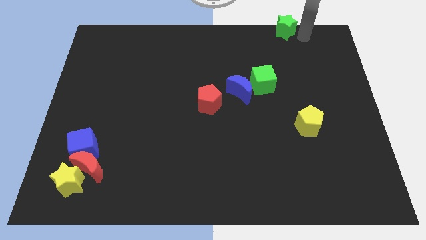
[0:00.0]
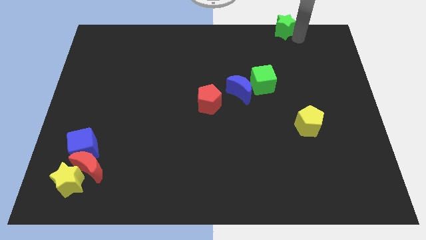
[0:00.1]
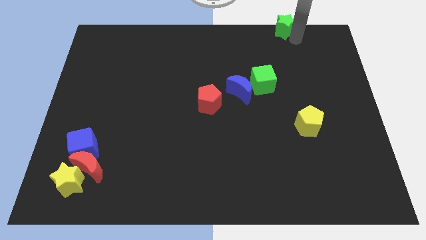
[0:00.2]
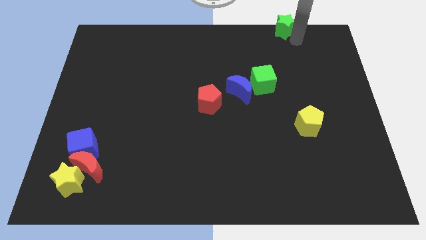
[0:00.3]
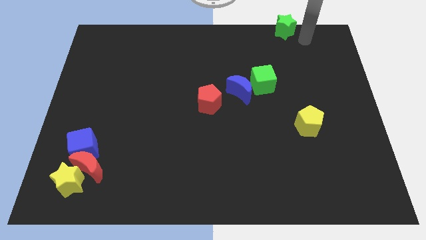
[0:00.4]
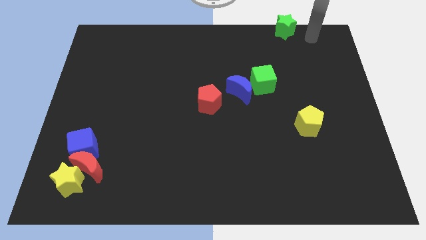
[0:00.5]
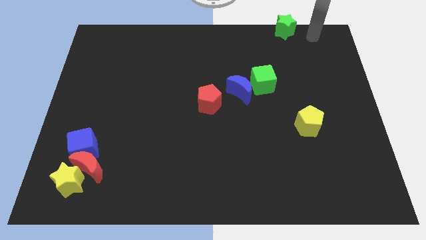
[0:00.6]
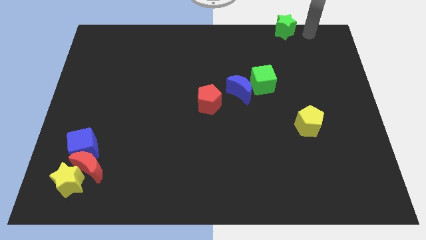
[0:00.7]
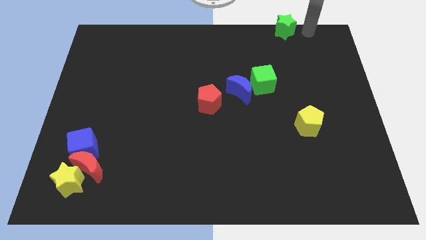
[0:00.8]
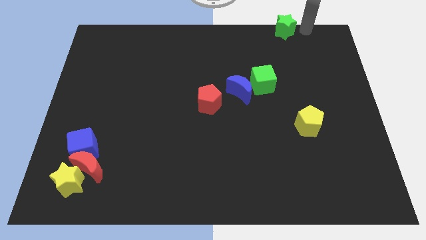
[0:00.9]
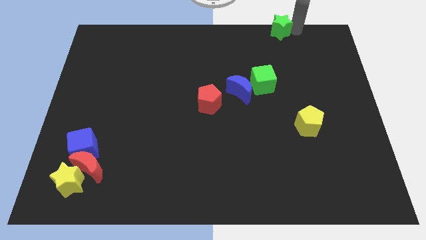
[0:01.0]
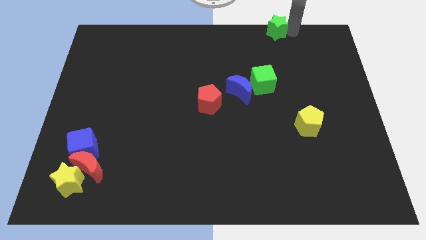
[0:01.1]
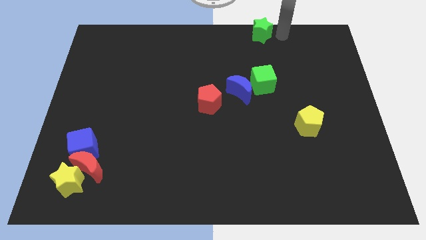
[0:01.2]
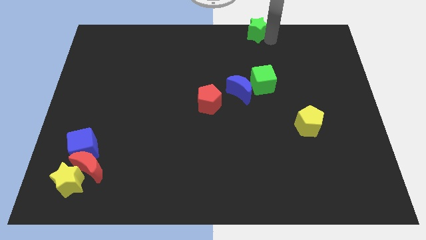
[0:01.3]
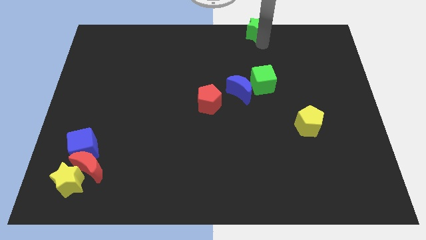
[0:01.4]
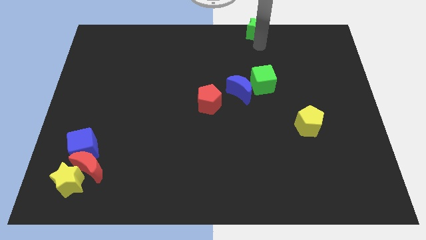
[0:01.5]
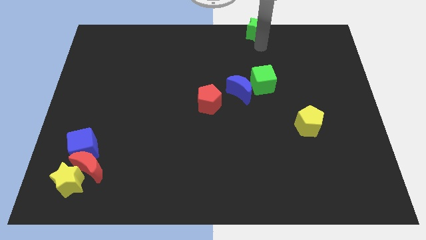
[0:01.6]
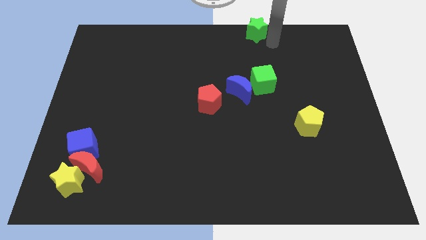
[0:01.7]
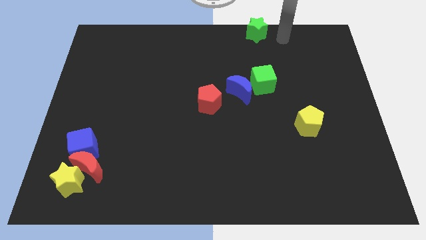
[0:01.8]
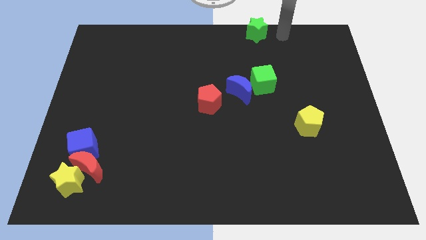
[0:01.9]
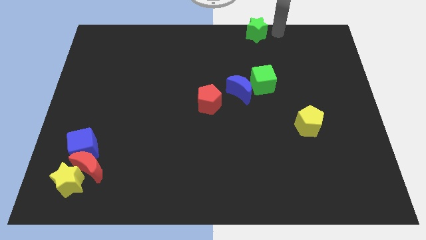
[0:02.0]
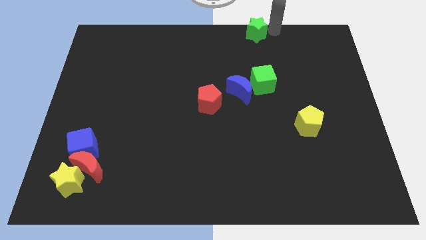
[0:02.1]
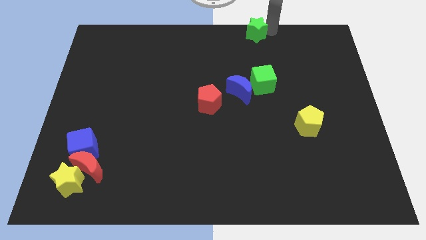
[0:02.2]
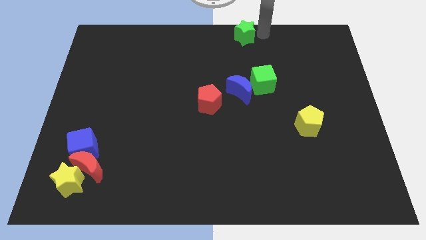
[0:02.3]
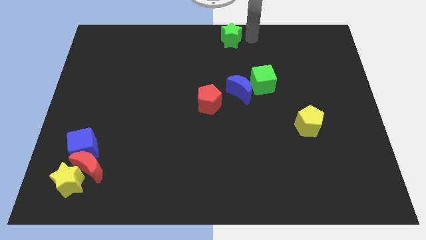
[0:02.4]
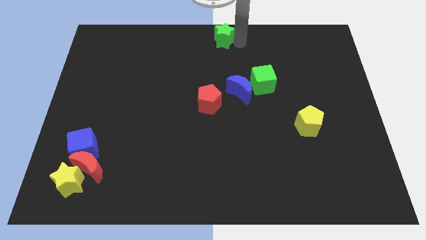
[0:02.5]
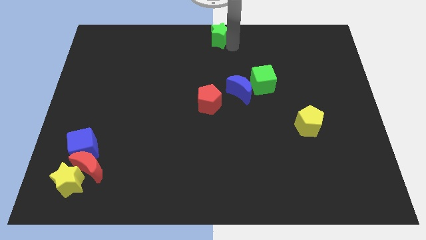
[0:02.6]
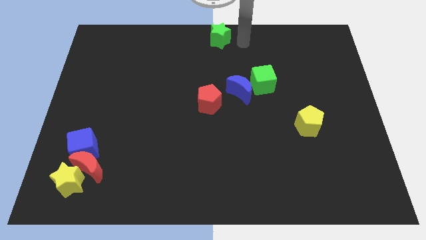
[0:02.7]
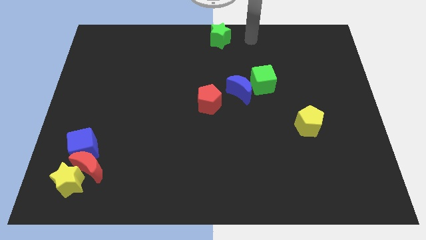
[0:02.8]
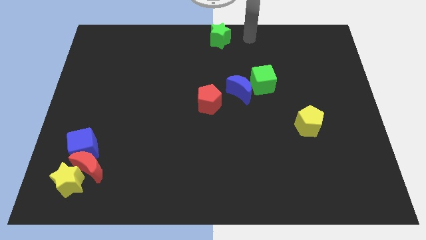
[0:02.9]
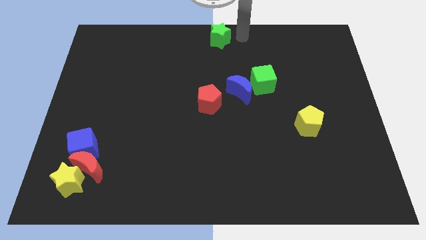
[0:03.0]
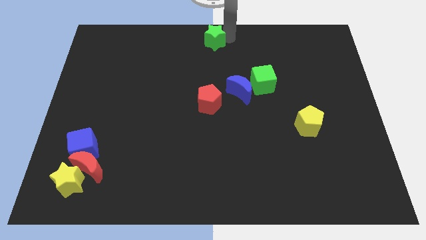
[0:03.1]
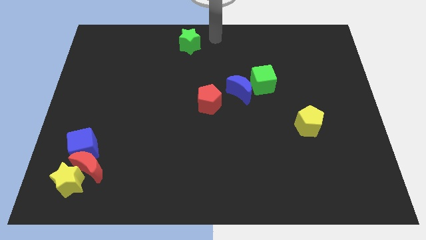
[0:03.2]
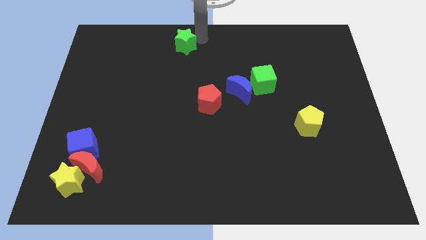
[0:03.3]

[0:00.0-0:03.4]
place the green star above the red pentagon

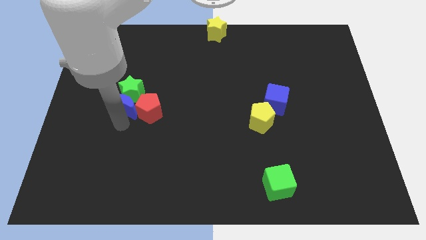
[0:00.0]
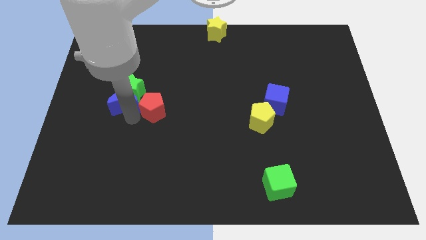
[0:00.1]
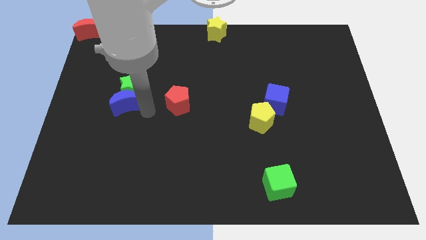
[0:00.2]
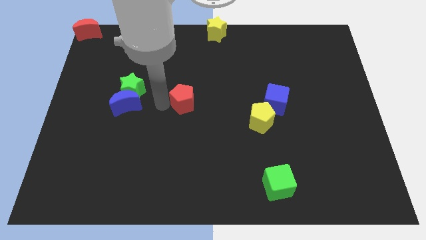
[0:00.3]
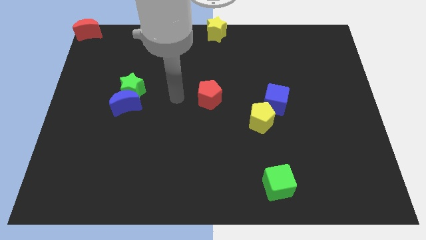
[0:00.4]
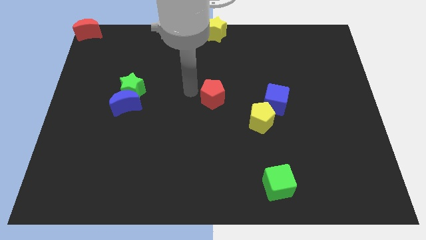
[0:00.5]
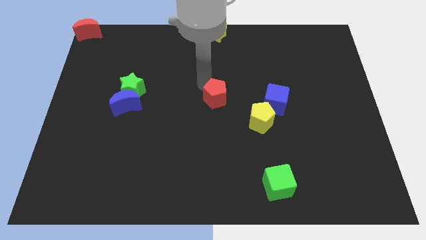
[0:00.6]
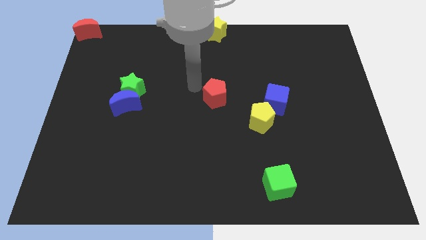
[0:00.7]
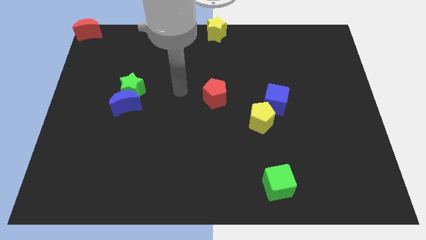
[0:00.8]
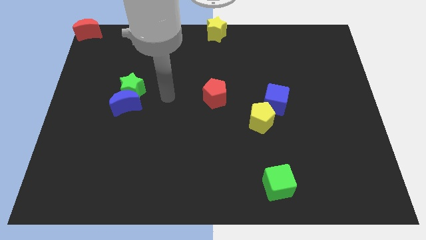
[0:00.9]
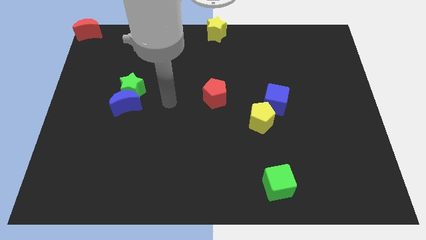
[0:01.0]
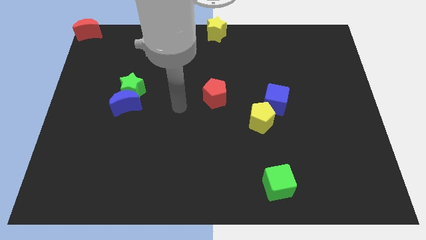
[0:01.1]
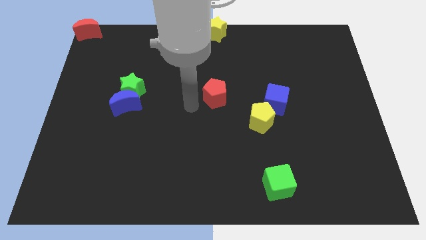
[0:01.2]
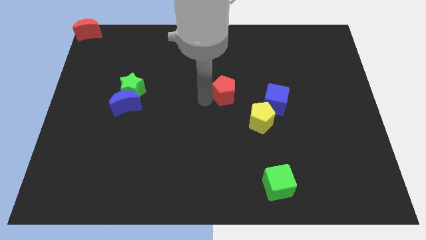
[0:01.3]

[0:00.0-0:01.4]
separate red pentagon from the blue moon

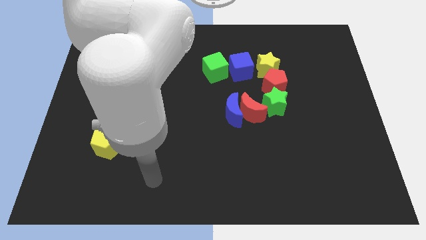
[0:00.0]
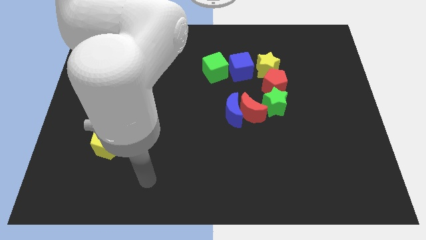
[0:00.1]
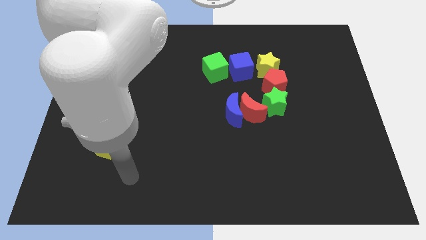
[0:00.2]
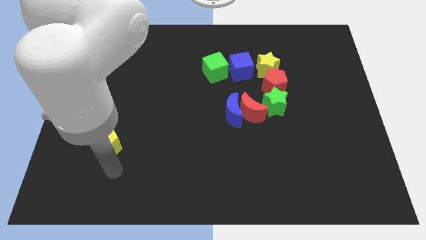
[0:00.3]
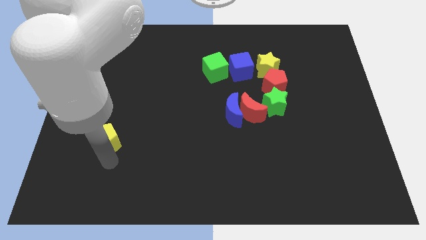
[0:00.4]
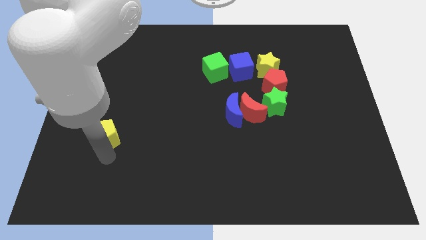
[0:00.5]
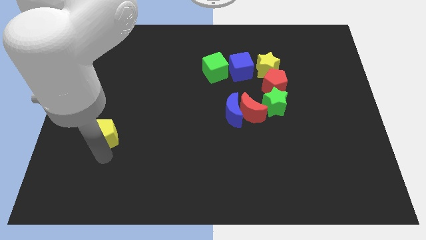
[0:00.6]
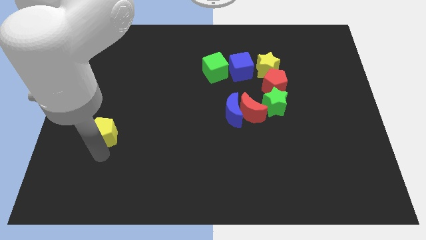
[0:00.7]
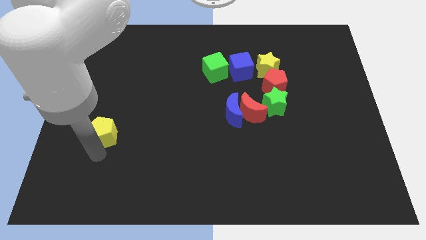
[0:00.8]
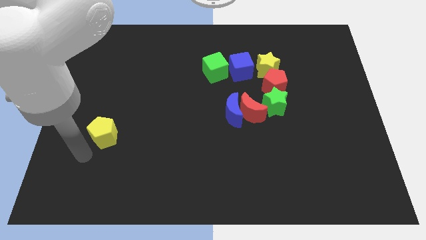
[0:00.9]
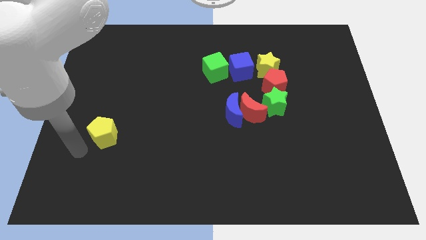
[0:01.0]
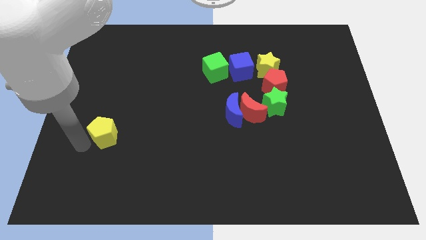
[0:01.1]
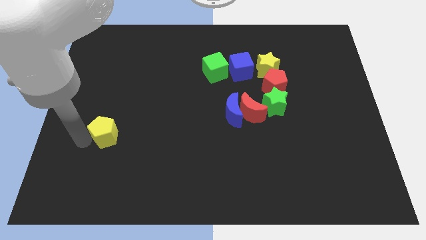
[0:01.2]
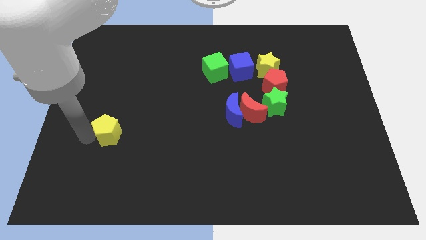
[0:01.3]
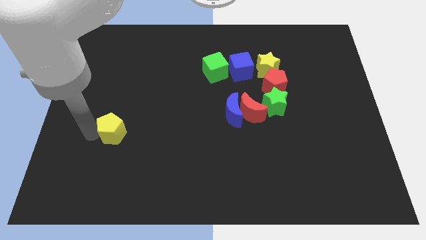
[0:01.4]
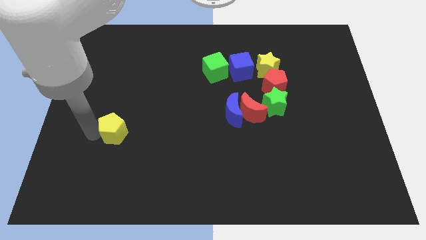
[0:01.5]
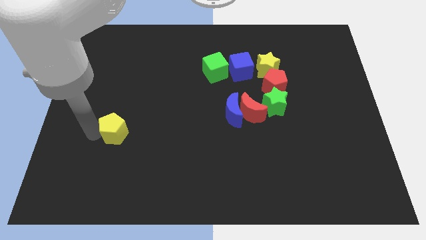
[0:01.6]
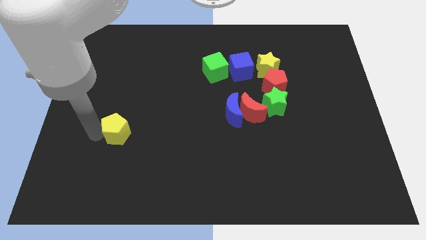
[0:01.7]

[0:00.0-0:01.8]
move the yellow pentagon slightly to the right side

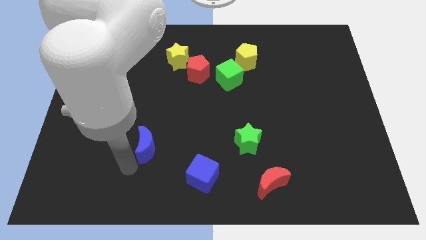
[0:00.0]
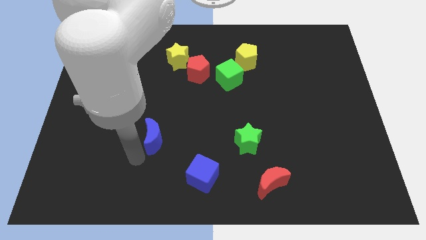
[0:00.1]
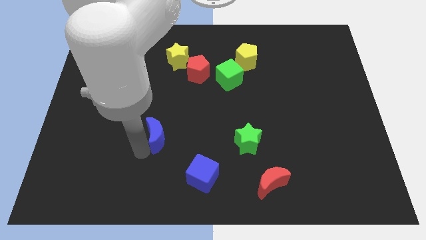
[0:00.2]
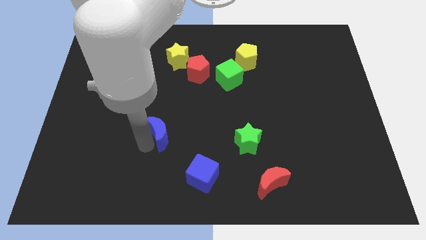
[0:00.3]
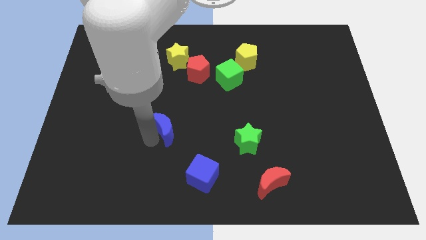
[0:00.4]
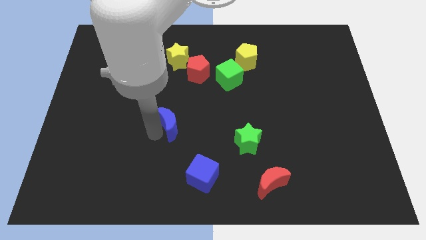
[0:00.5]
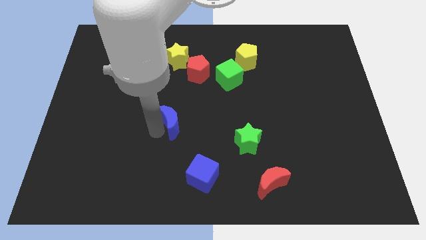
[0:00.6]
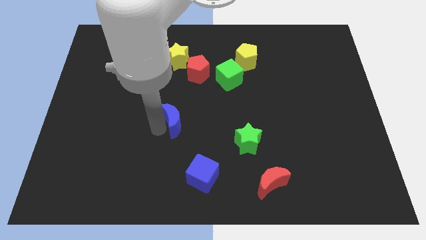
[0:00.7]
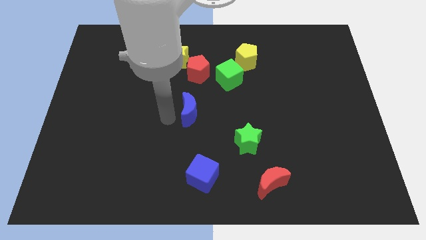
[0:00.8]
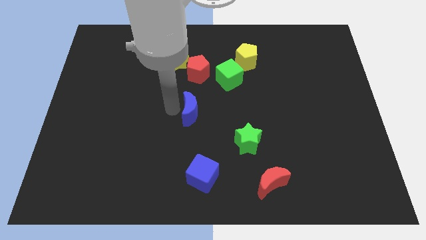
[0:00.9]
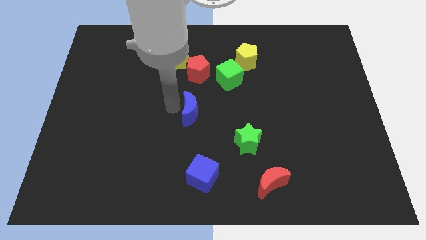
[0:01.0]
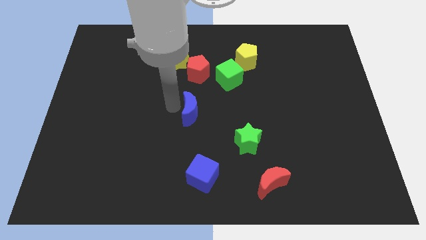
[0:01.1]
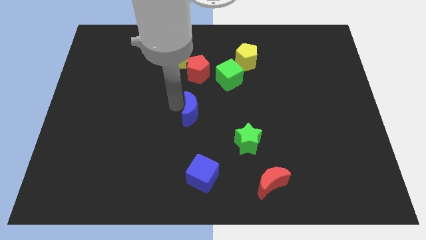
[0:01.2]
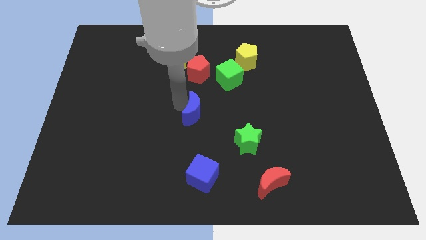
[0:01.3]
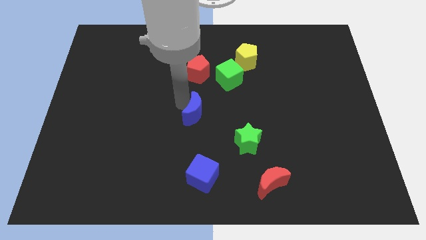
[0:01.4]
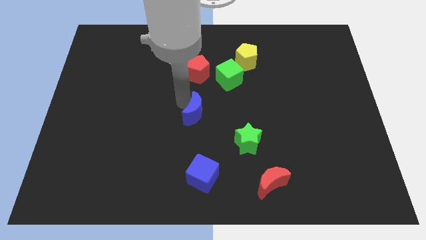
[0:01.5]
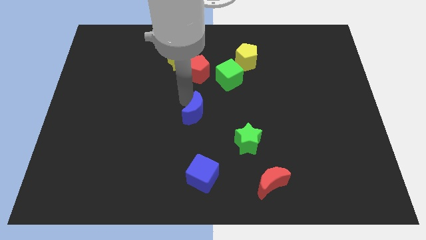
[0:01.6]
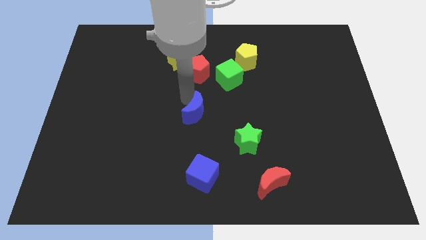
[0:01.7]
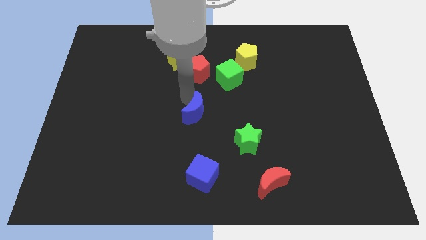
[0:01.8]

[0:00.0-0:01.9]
place the blue moon towards the center of the board

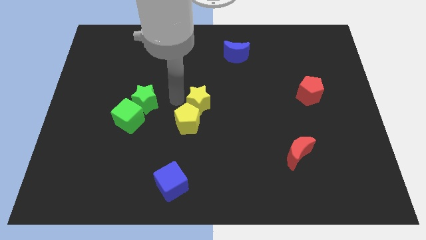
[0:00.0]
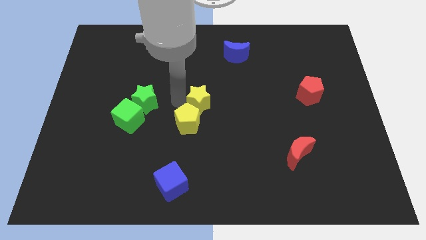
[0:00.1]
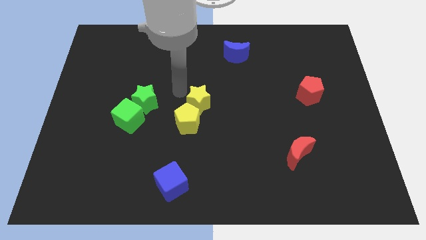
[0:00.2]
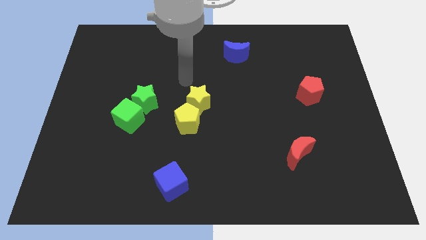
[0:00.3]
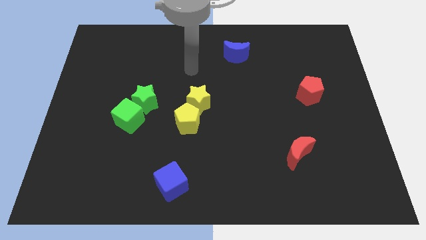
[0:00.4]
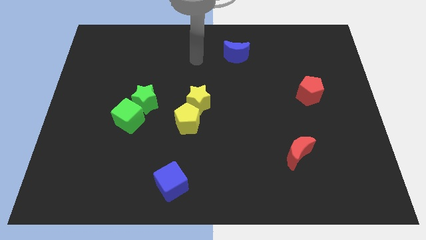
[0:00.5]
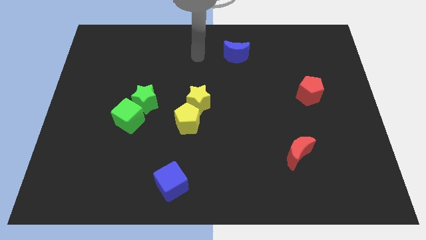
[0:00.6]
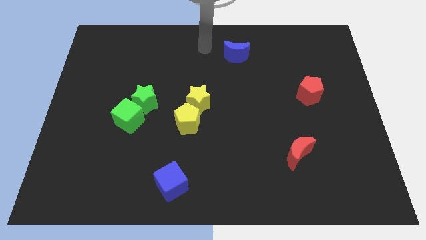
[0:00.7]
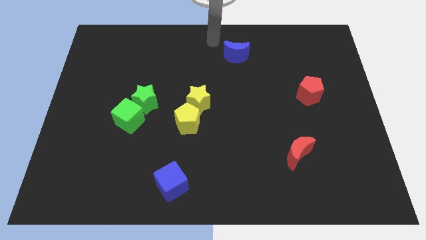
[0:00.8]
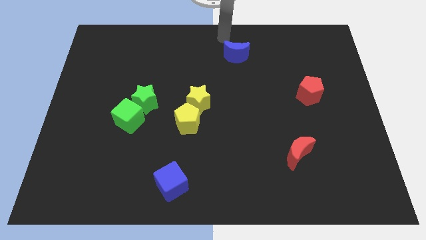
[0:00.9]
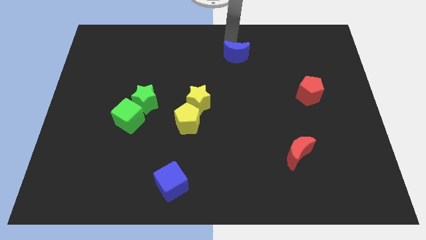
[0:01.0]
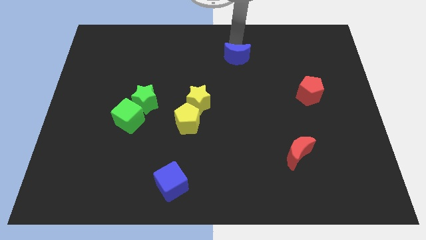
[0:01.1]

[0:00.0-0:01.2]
move your arm towards blue crescent
